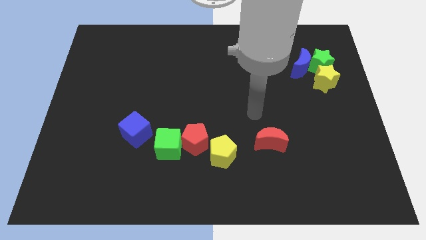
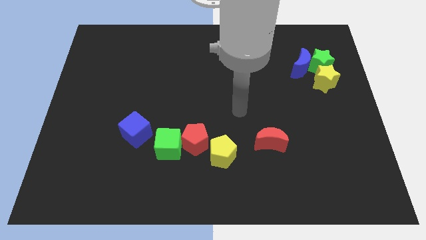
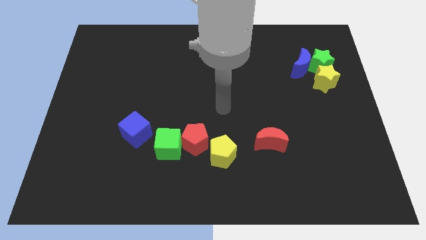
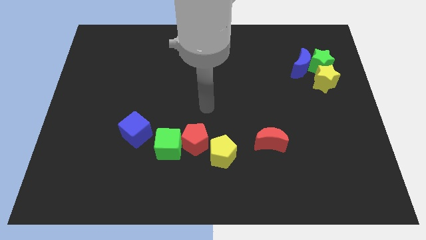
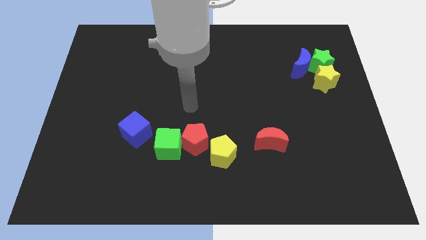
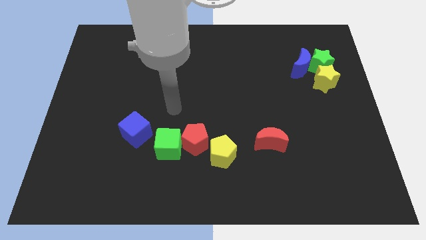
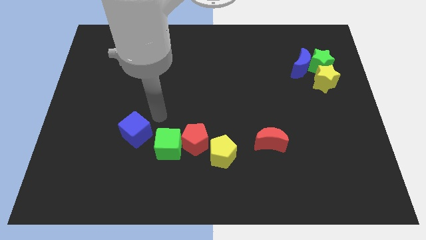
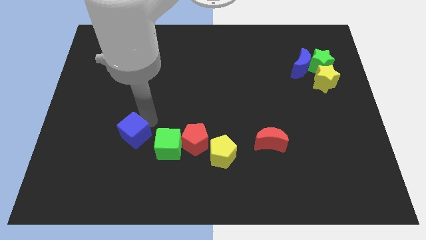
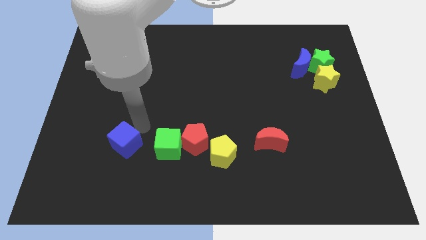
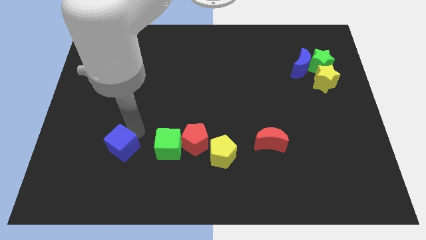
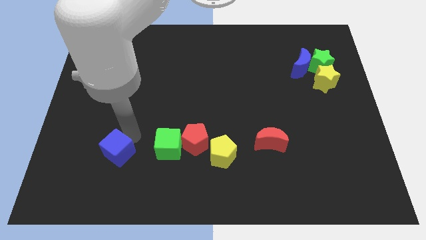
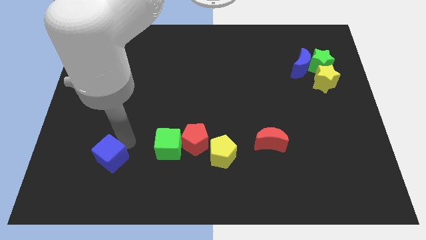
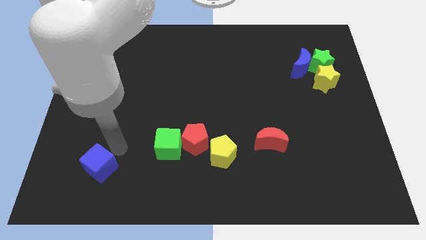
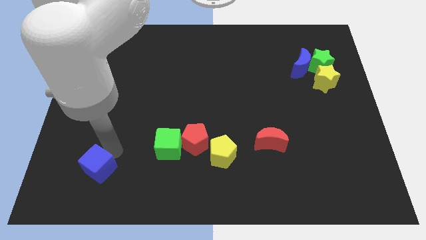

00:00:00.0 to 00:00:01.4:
place blue cube to the bottom left of green cube

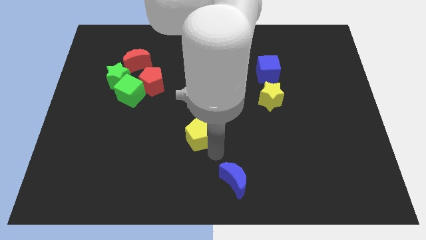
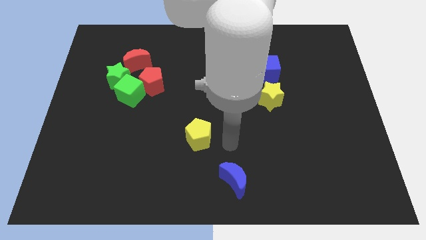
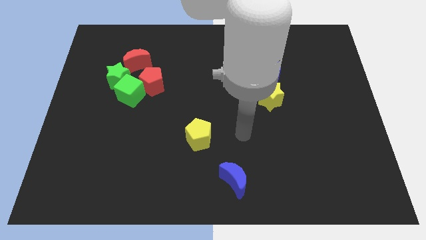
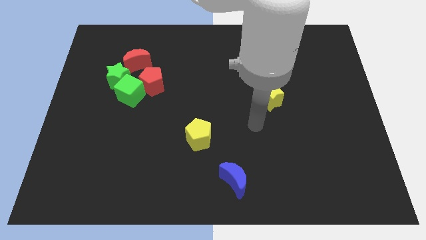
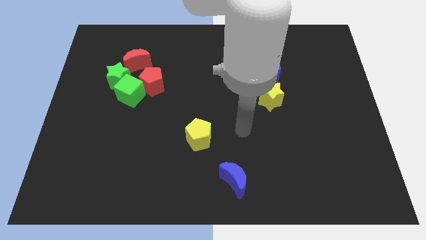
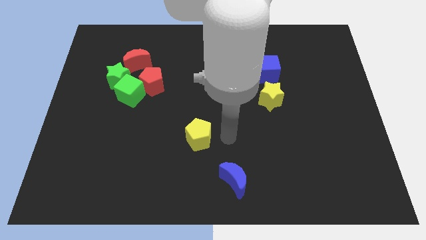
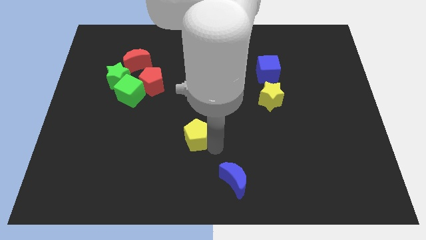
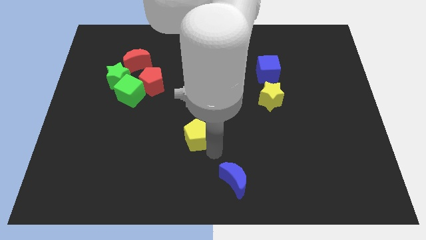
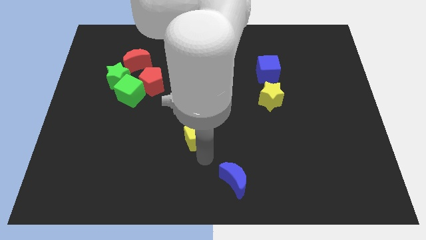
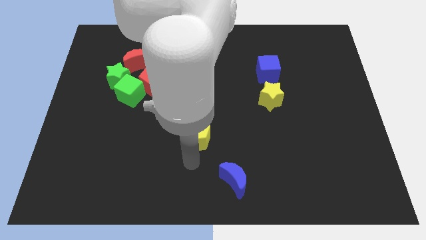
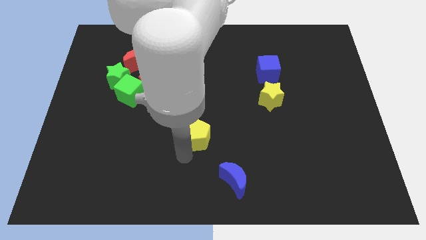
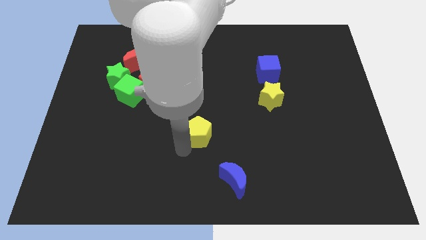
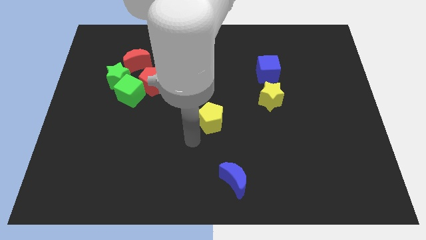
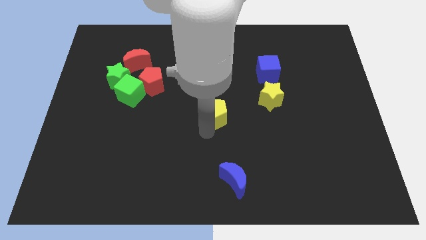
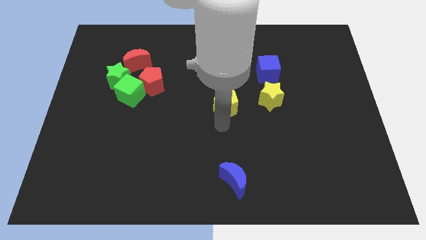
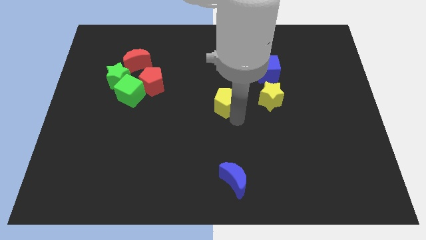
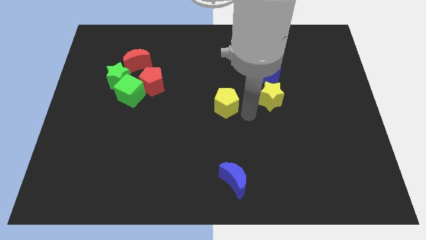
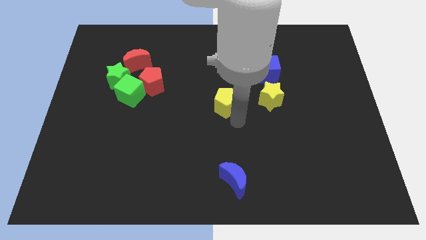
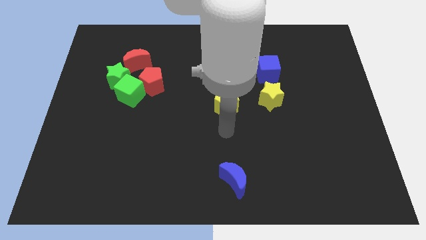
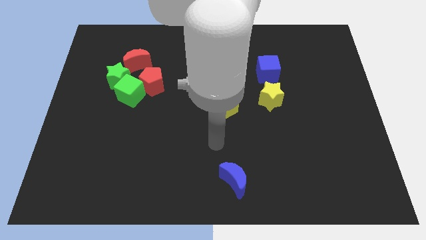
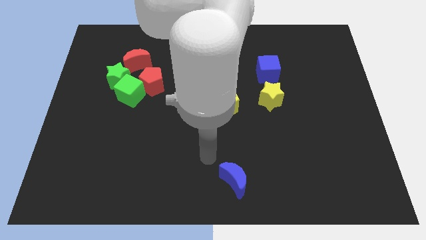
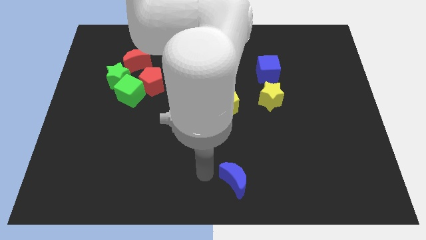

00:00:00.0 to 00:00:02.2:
move yellow pentagon to the left of yellow star

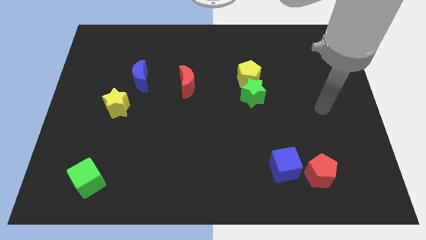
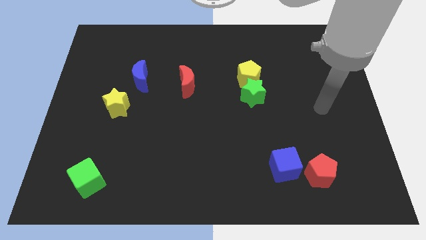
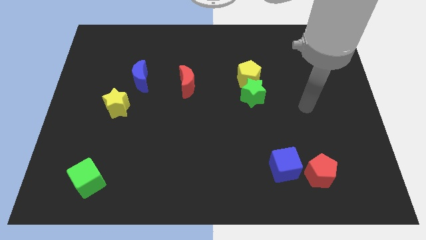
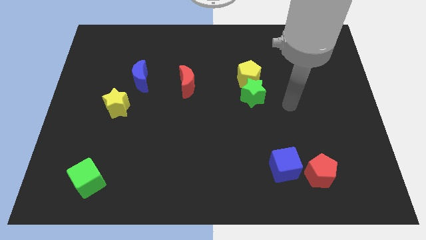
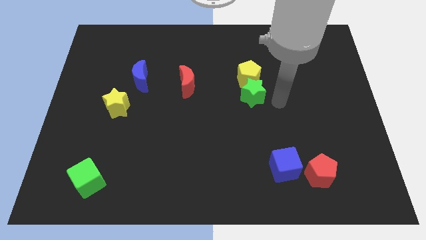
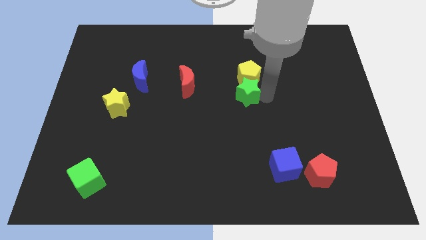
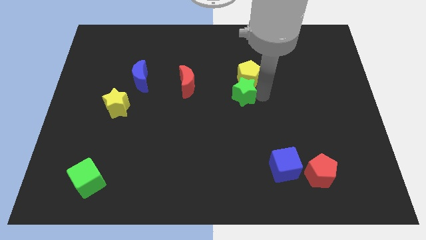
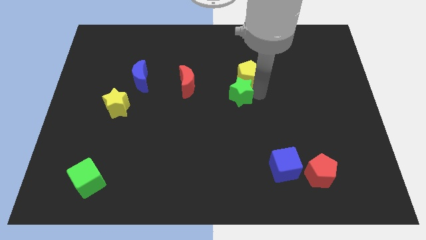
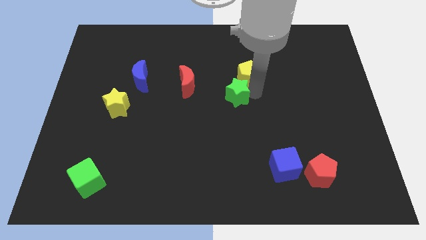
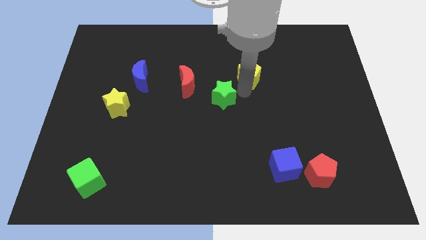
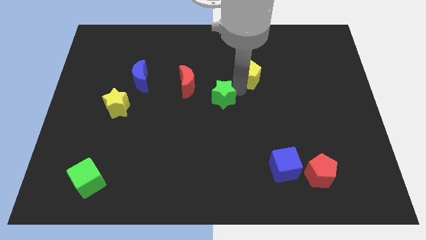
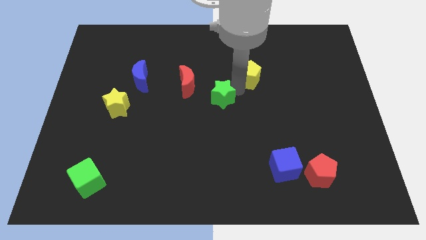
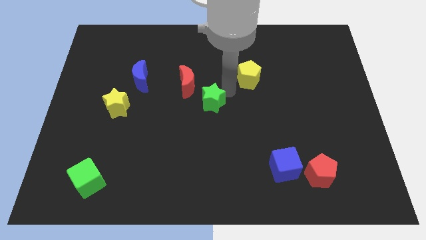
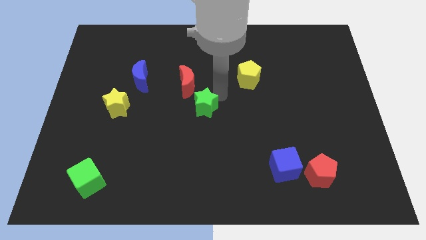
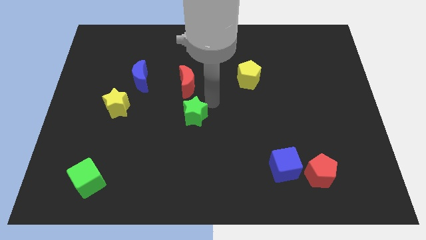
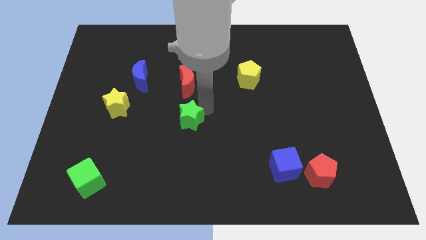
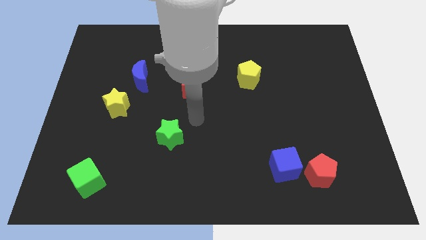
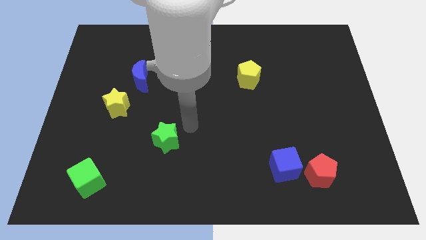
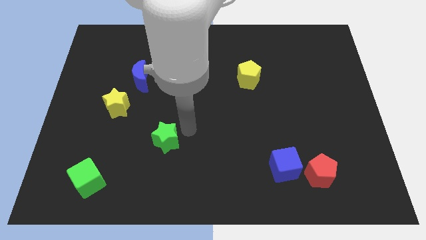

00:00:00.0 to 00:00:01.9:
move the green star towards green cube diagonally

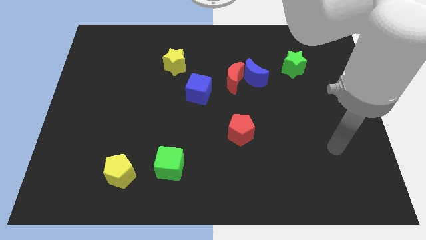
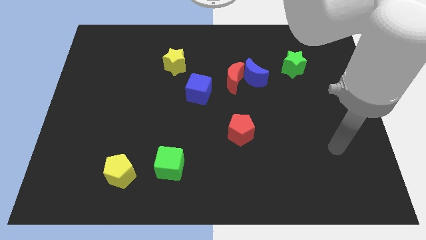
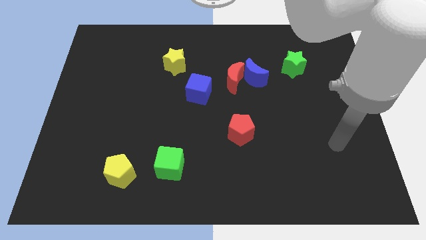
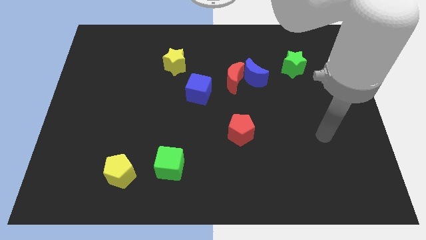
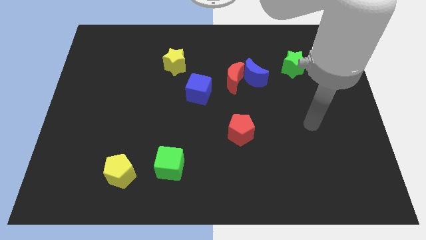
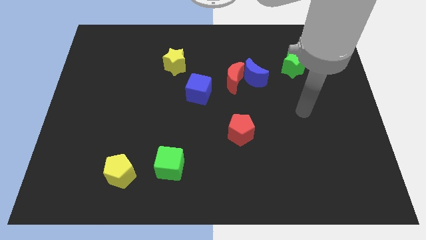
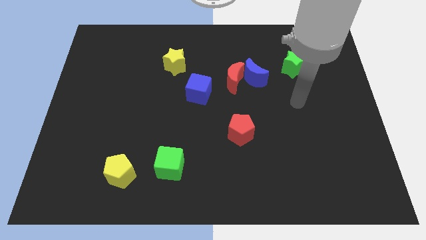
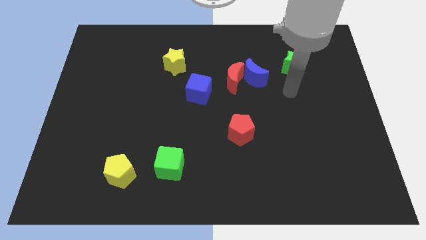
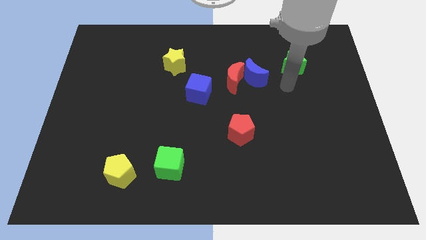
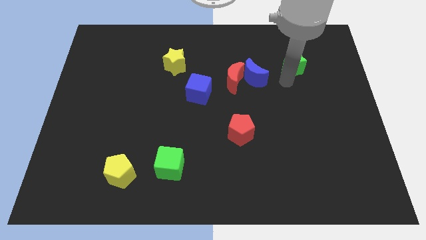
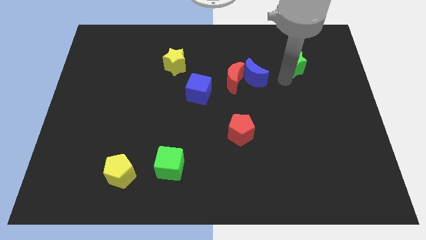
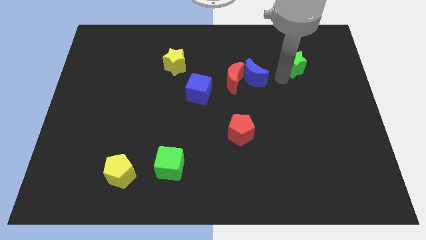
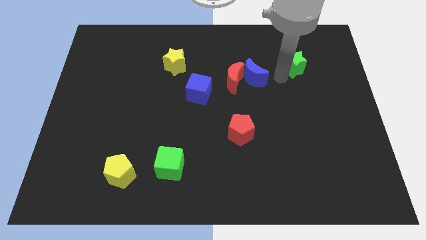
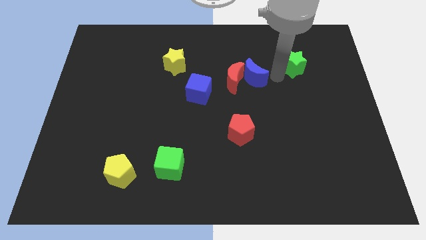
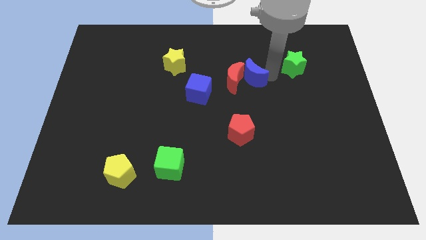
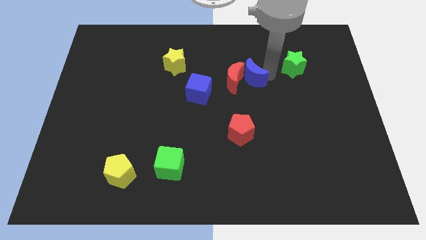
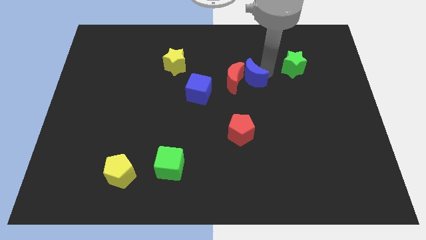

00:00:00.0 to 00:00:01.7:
point the arm in between the blue moon and the green star

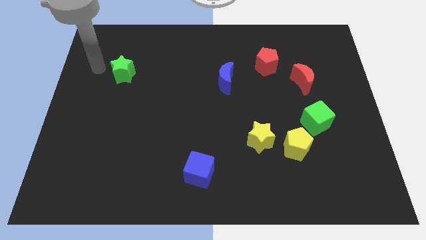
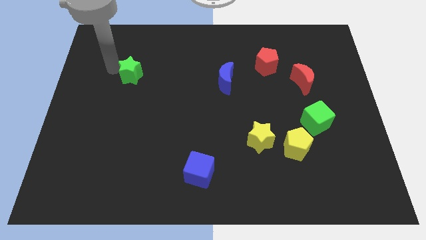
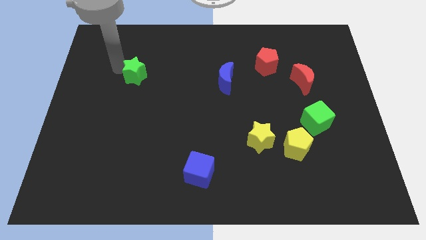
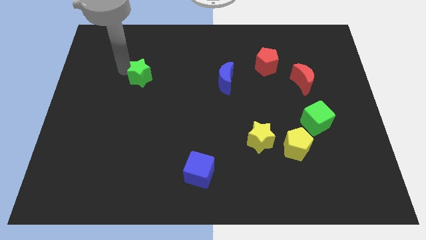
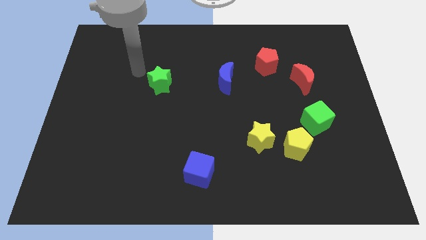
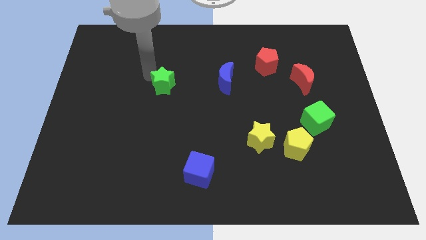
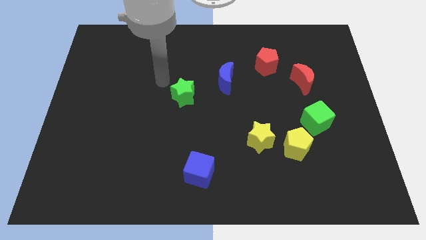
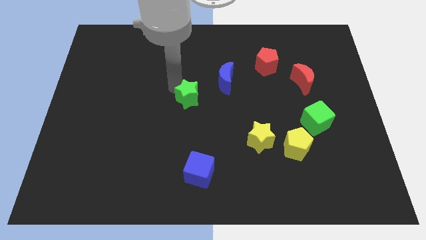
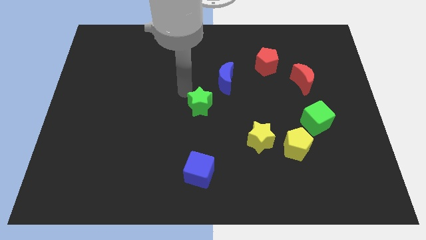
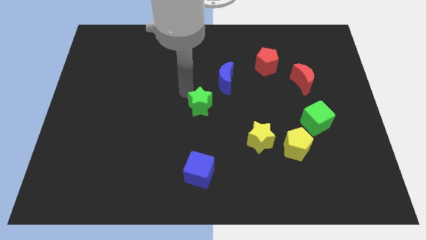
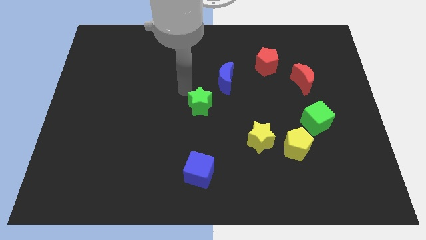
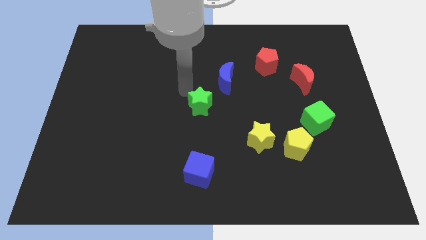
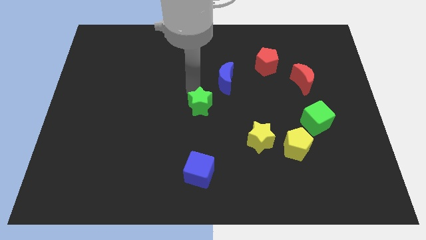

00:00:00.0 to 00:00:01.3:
push the green star to the center of the board

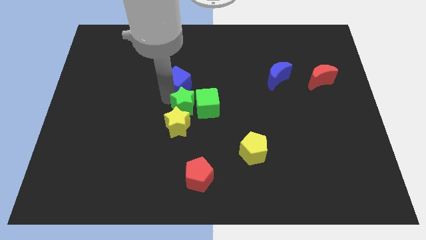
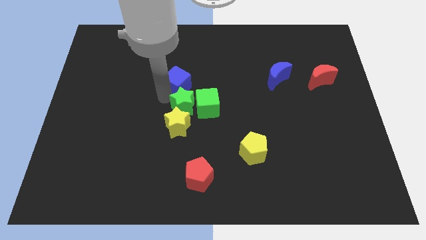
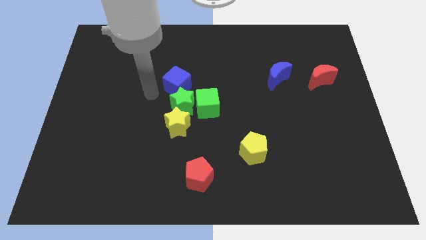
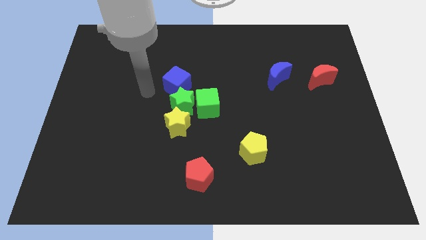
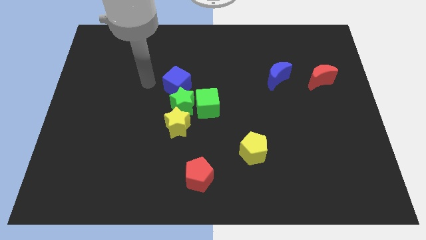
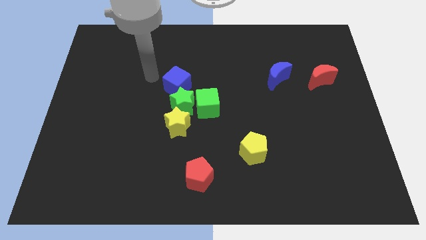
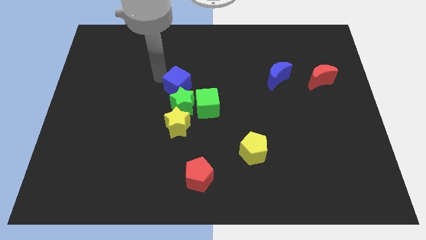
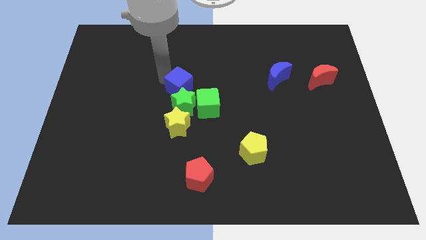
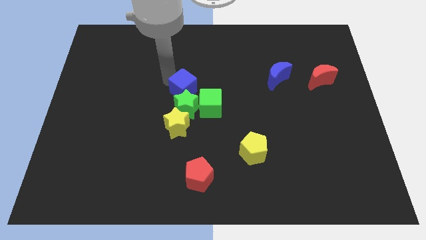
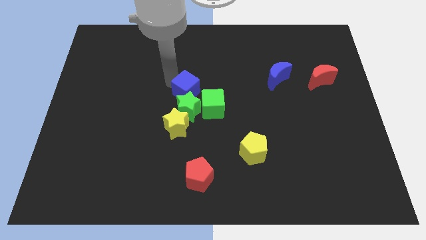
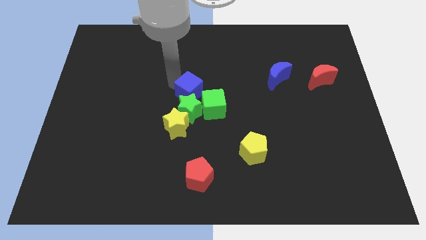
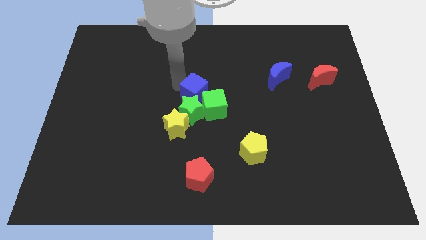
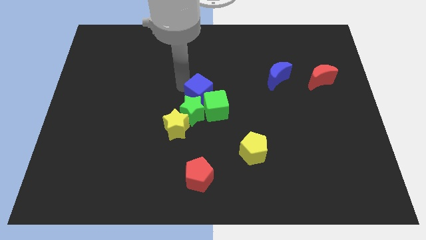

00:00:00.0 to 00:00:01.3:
push blue cube into green star
